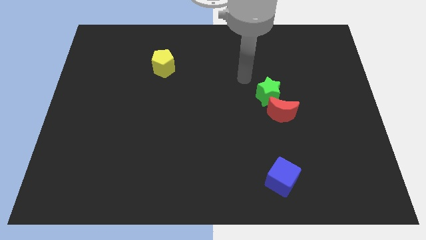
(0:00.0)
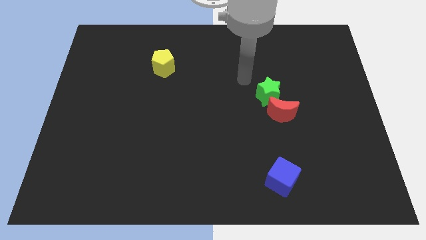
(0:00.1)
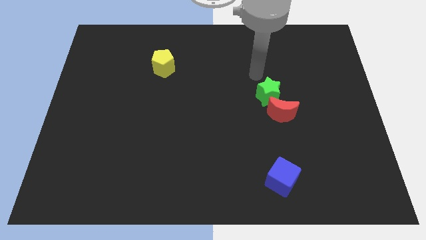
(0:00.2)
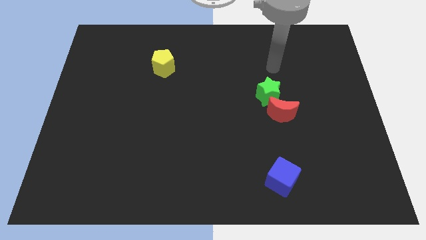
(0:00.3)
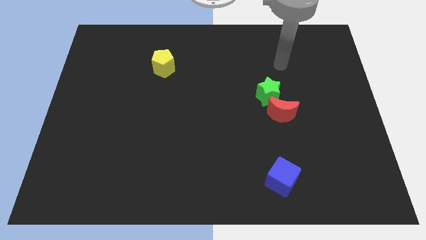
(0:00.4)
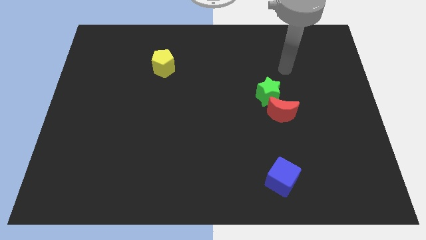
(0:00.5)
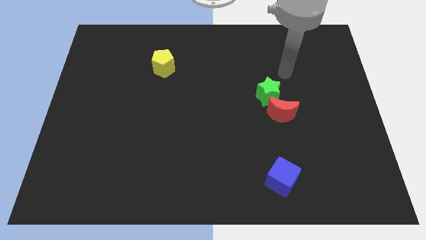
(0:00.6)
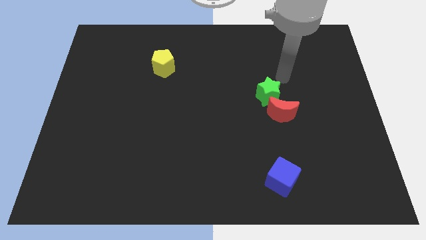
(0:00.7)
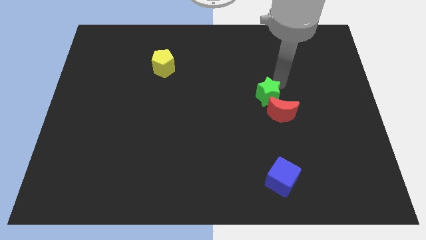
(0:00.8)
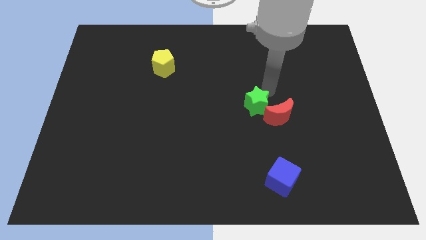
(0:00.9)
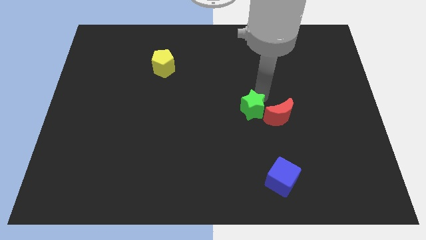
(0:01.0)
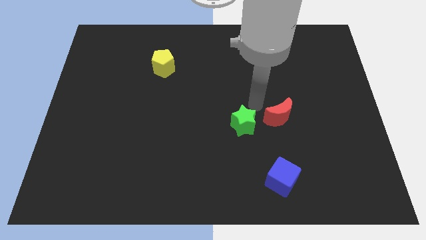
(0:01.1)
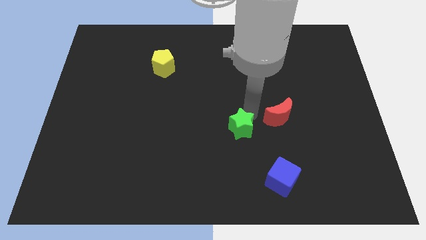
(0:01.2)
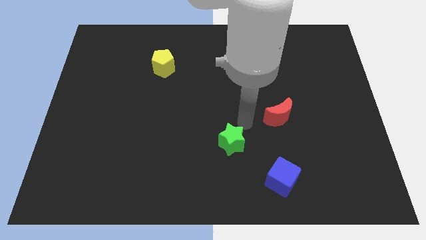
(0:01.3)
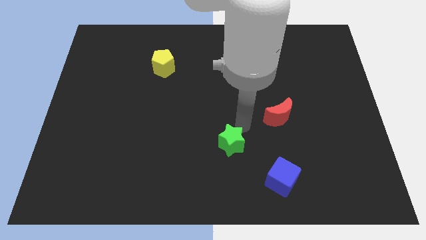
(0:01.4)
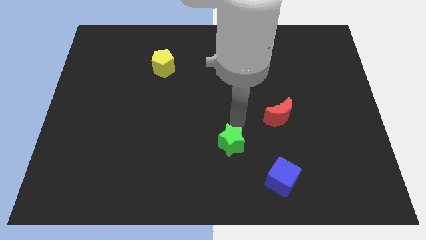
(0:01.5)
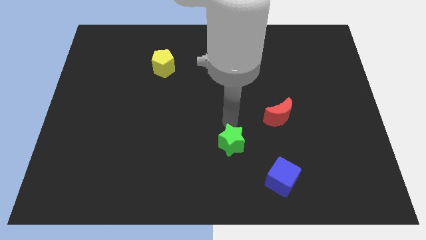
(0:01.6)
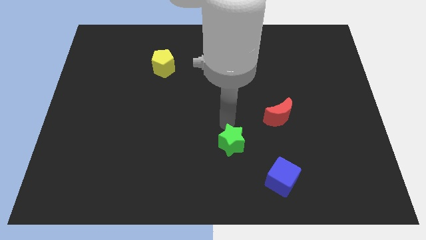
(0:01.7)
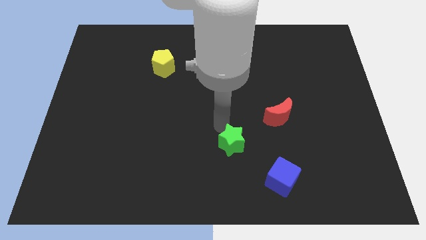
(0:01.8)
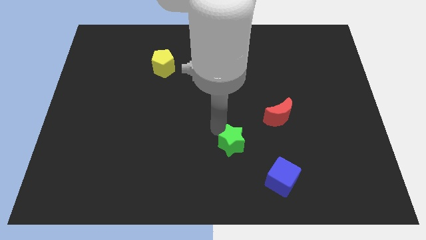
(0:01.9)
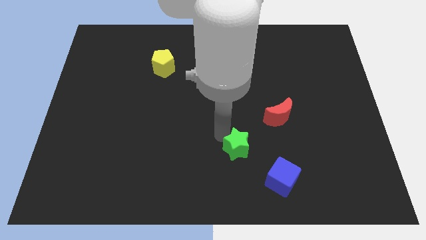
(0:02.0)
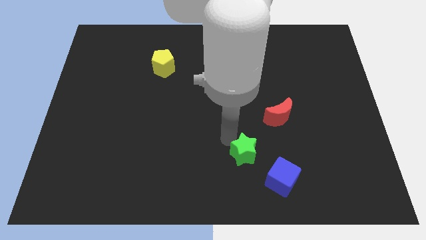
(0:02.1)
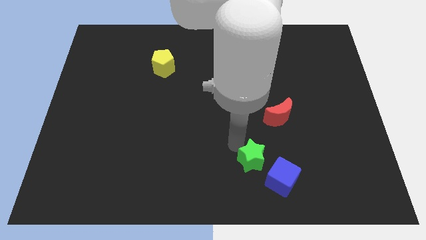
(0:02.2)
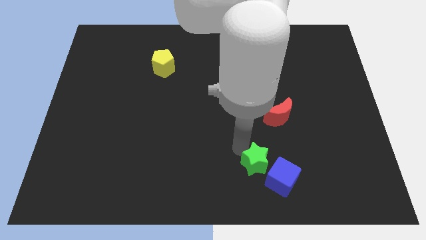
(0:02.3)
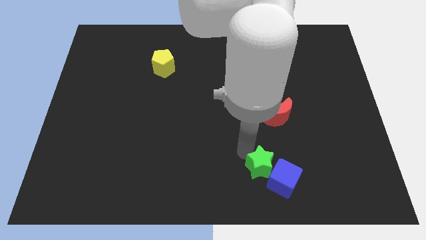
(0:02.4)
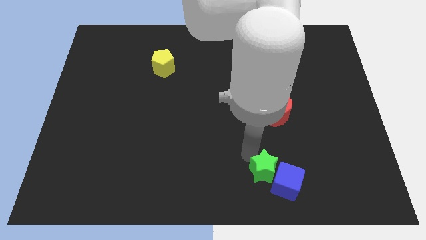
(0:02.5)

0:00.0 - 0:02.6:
move the green block to the blue cube

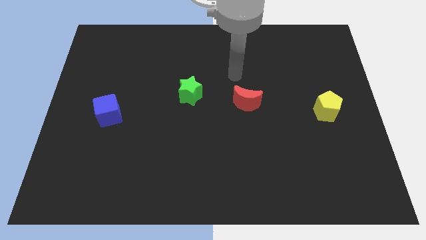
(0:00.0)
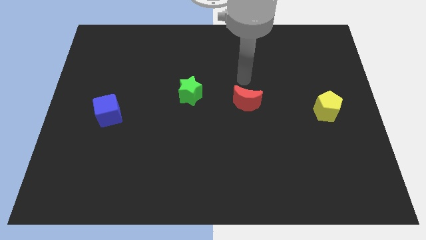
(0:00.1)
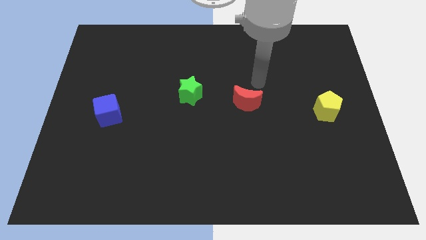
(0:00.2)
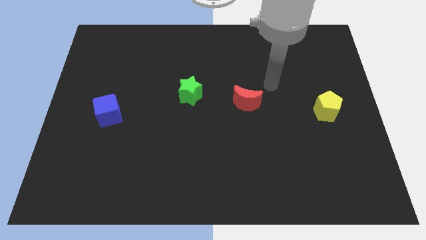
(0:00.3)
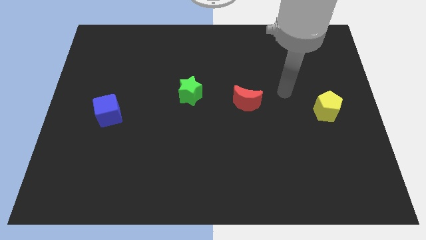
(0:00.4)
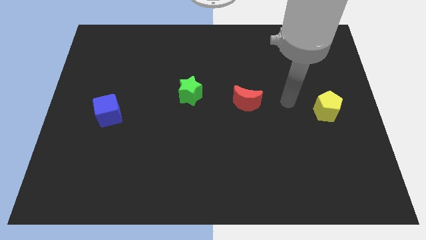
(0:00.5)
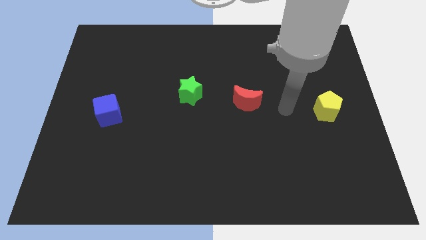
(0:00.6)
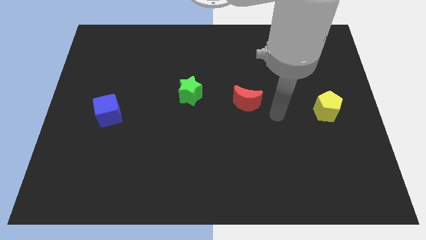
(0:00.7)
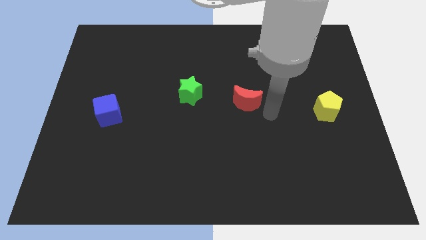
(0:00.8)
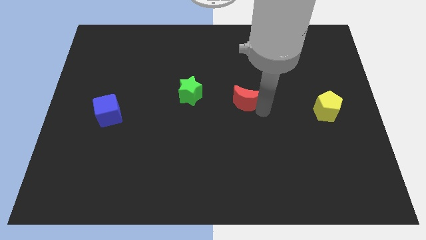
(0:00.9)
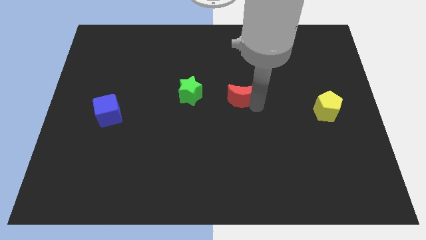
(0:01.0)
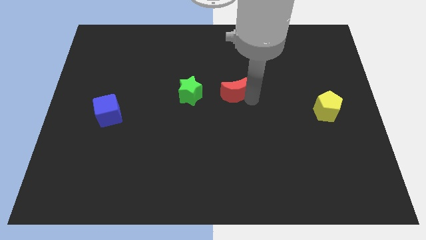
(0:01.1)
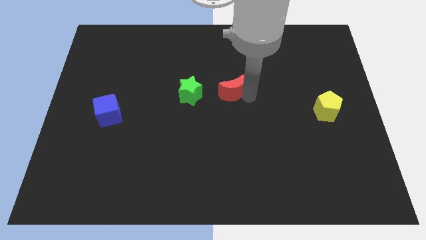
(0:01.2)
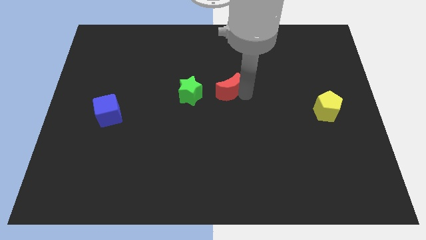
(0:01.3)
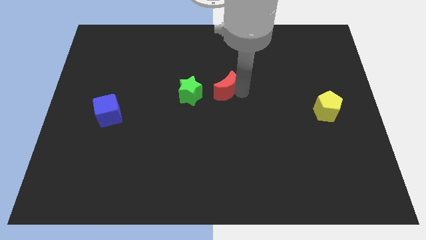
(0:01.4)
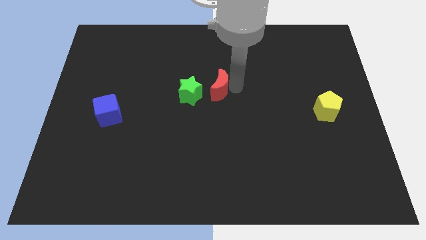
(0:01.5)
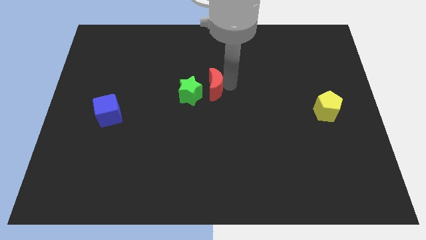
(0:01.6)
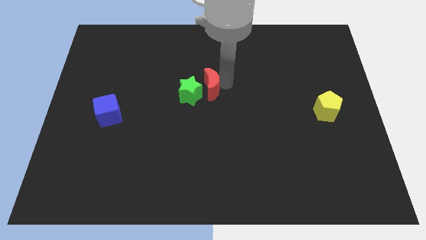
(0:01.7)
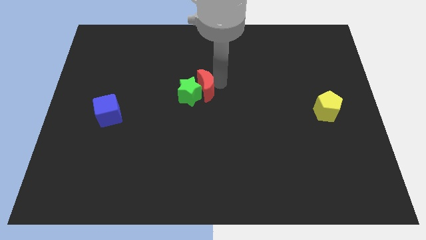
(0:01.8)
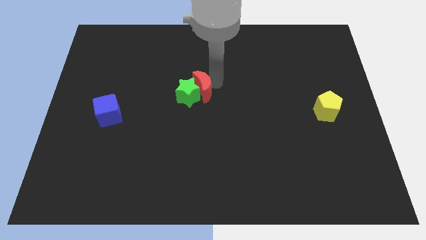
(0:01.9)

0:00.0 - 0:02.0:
slide the red block next to the star

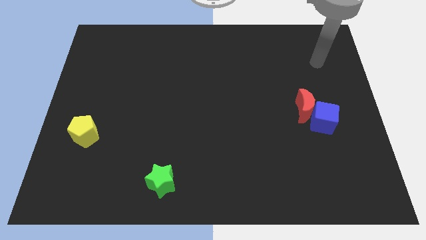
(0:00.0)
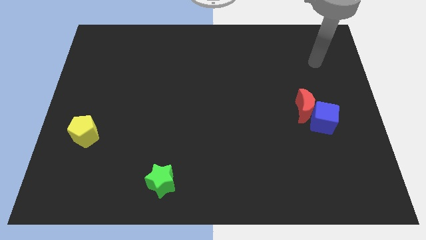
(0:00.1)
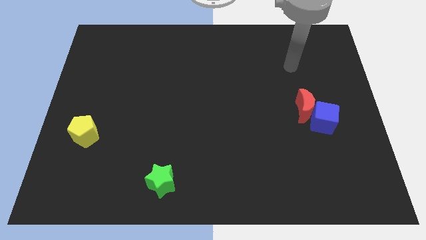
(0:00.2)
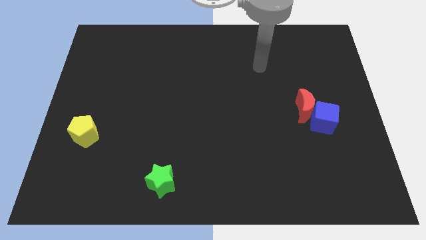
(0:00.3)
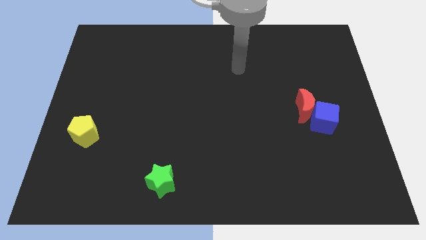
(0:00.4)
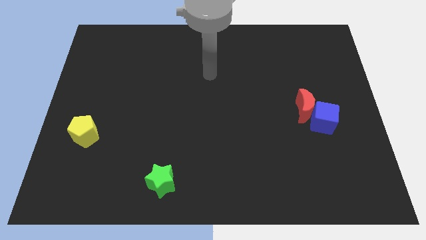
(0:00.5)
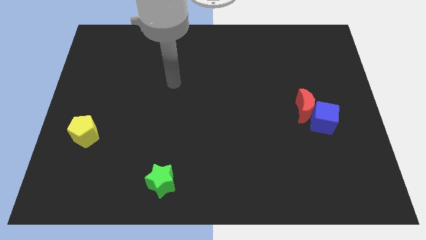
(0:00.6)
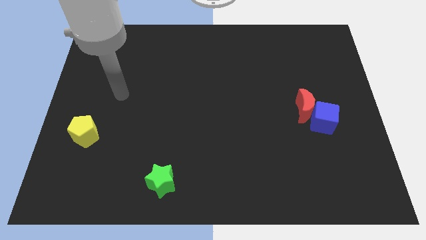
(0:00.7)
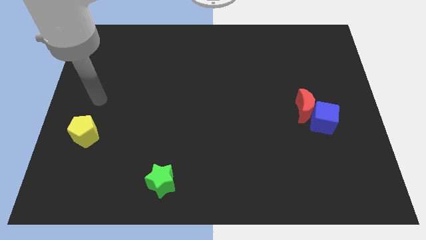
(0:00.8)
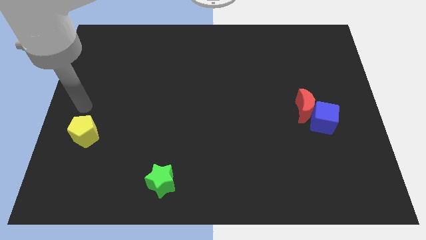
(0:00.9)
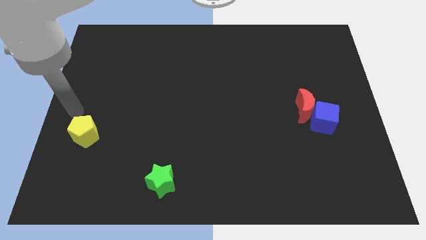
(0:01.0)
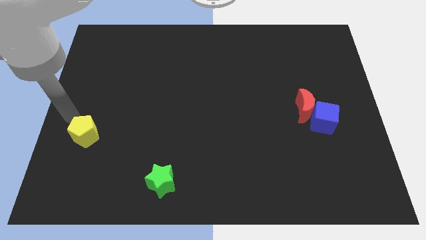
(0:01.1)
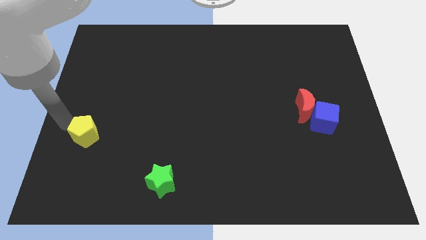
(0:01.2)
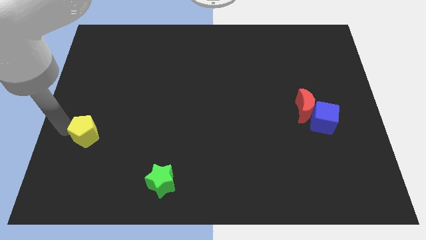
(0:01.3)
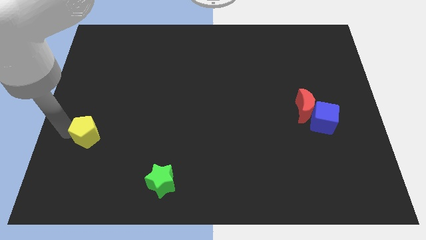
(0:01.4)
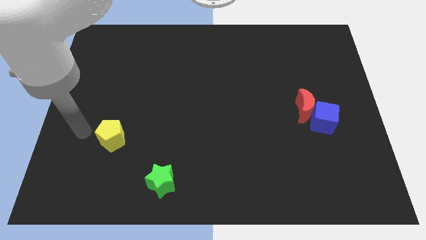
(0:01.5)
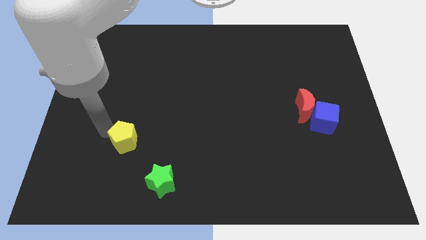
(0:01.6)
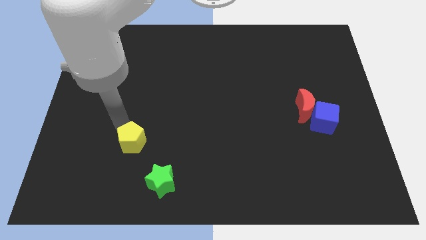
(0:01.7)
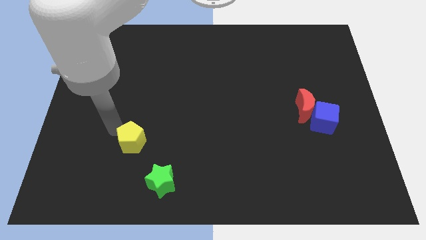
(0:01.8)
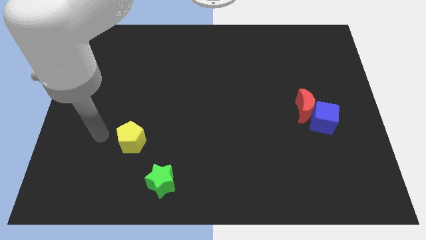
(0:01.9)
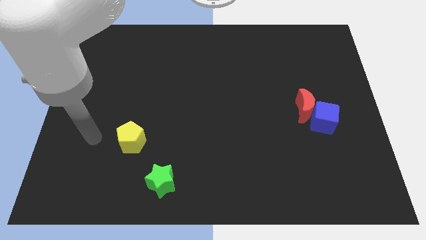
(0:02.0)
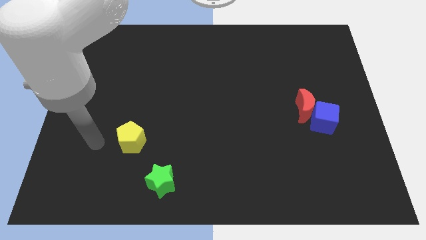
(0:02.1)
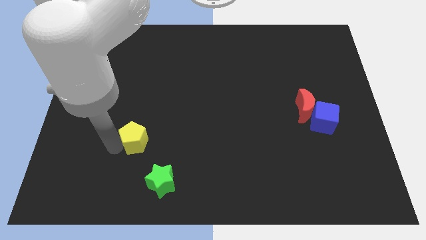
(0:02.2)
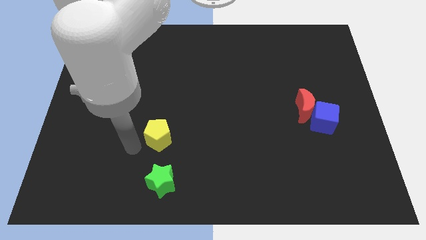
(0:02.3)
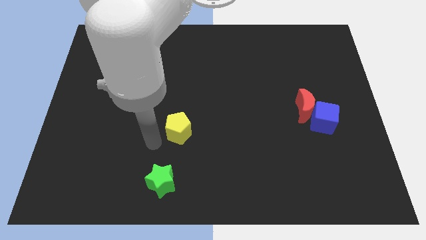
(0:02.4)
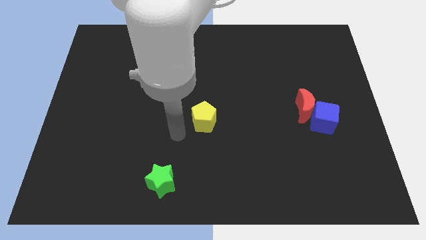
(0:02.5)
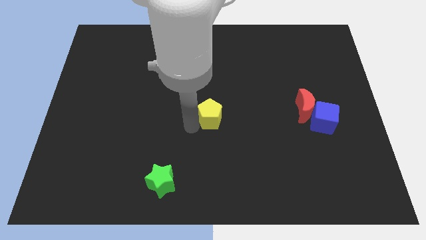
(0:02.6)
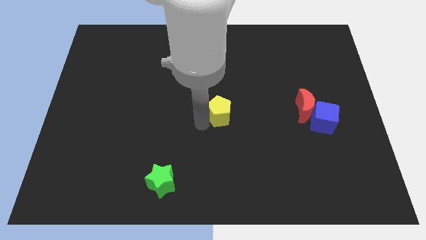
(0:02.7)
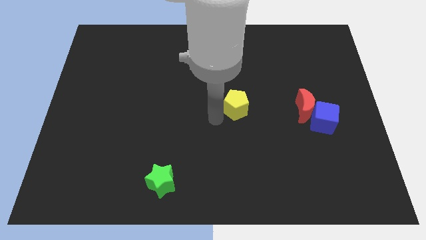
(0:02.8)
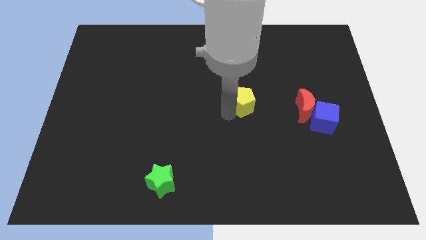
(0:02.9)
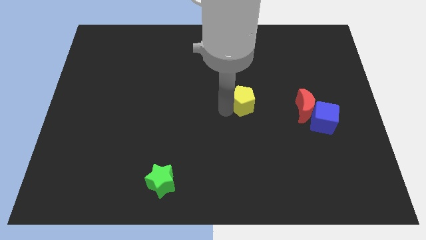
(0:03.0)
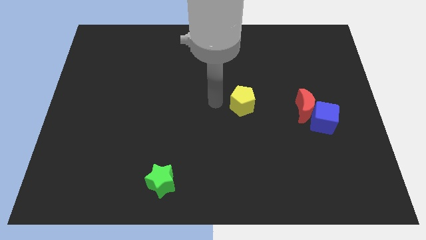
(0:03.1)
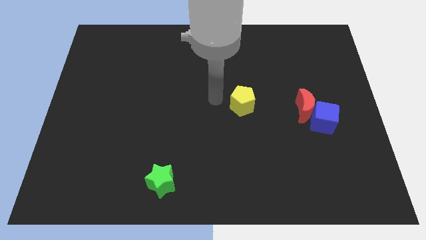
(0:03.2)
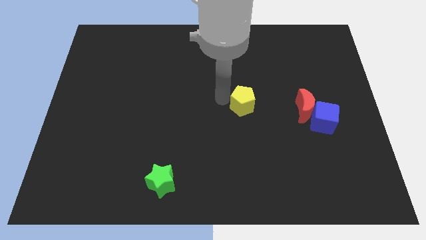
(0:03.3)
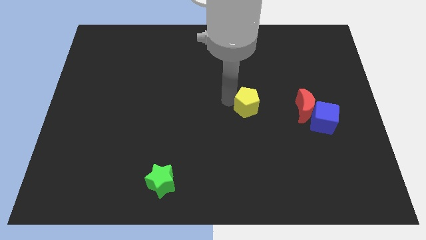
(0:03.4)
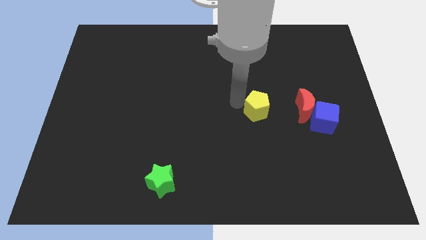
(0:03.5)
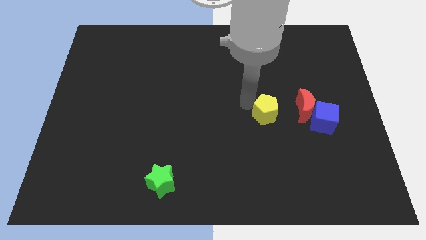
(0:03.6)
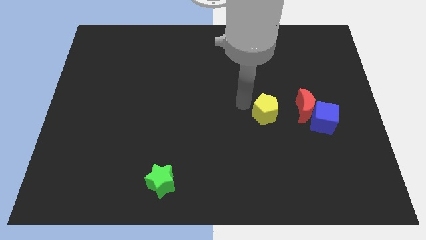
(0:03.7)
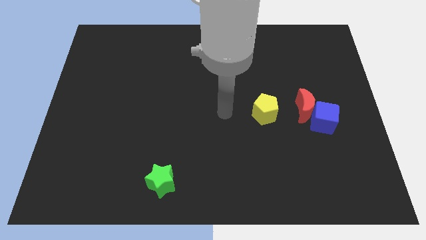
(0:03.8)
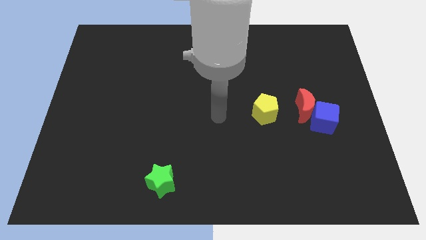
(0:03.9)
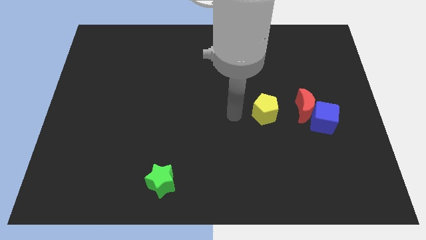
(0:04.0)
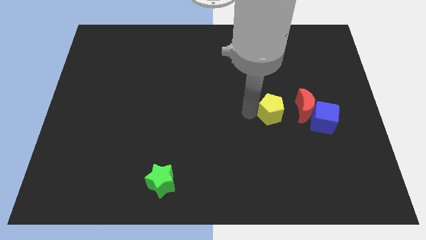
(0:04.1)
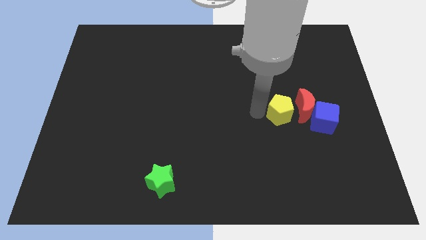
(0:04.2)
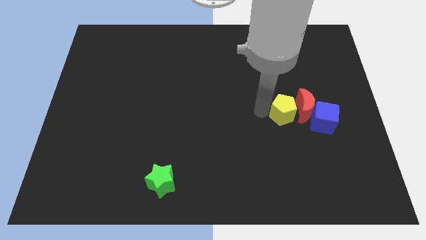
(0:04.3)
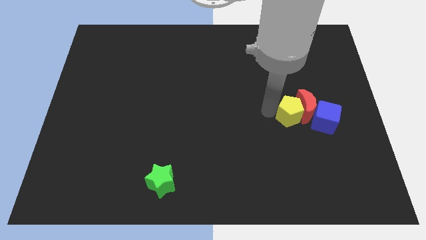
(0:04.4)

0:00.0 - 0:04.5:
move the pentagon to the red block
